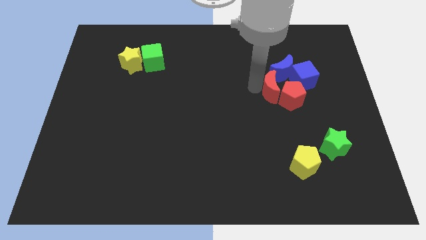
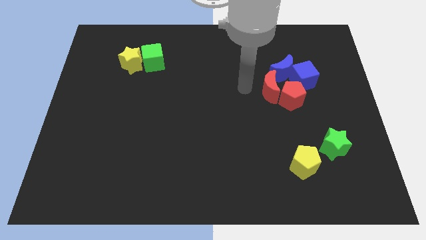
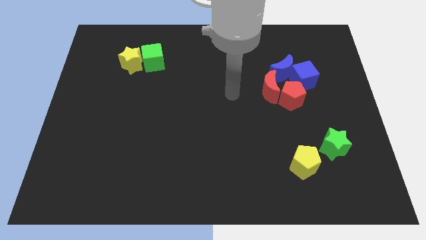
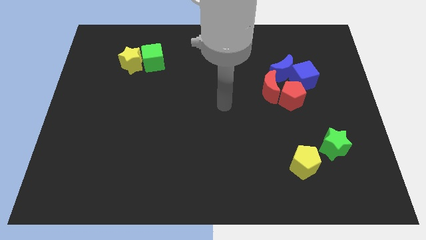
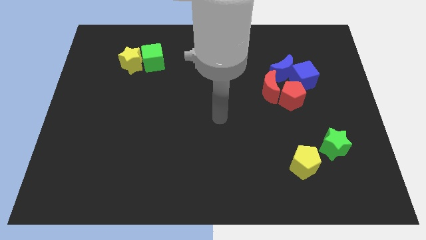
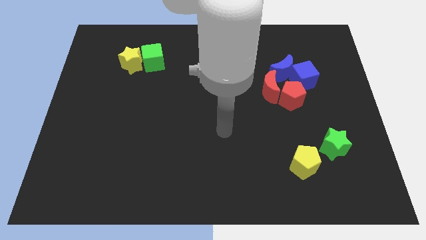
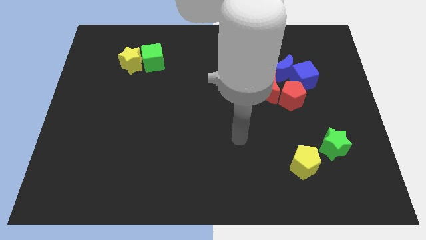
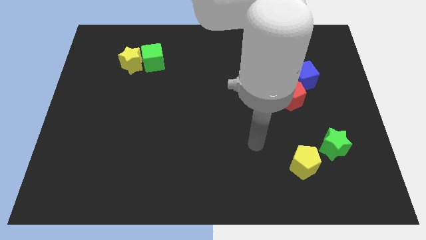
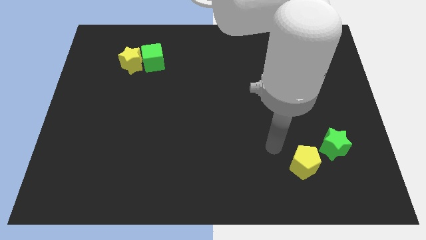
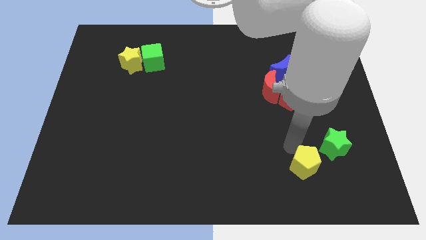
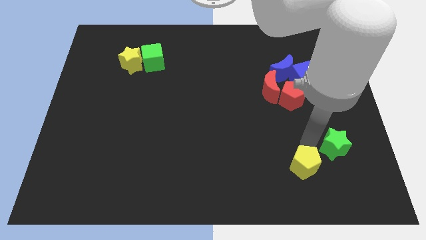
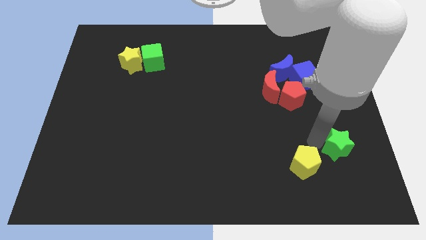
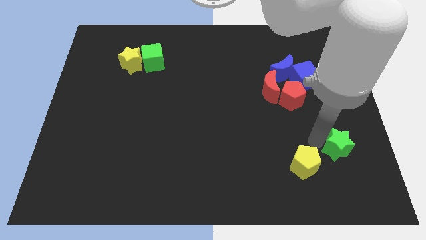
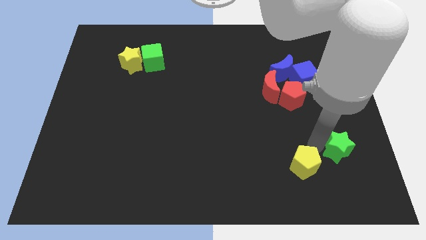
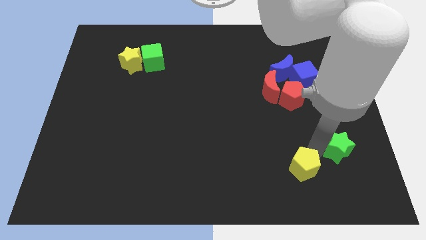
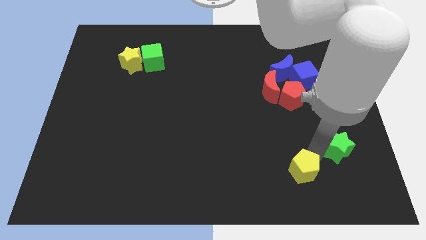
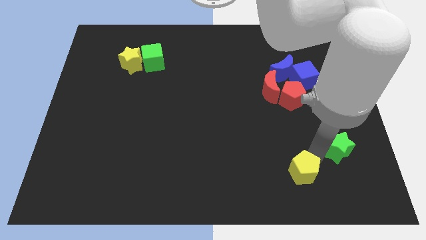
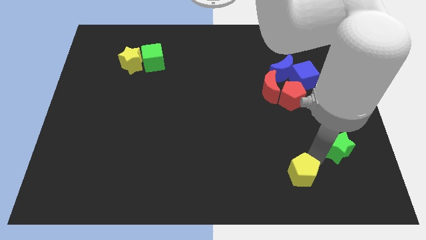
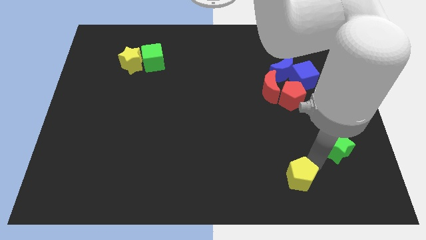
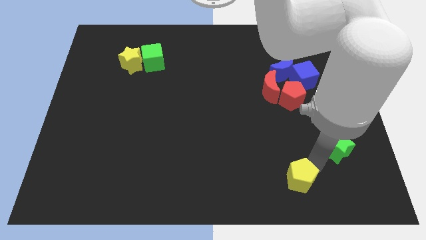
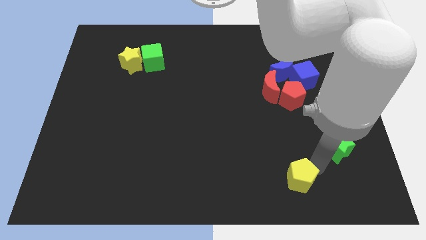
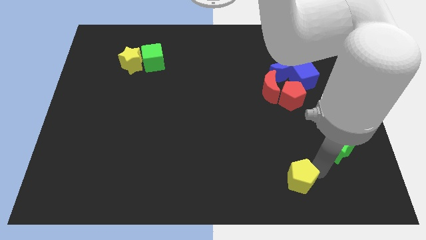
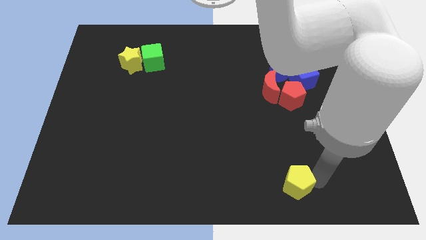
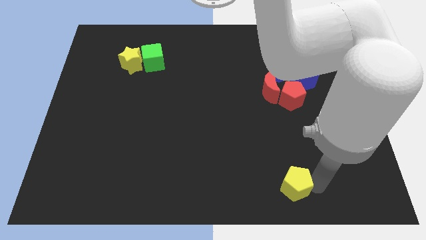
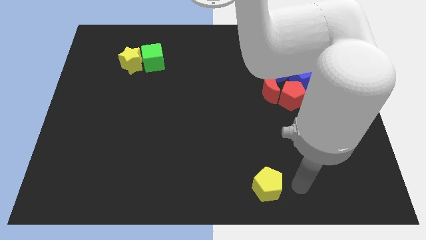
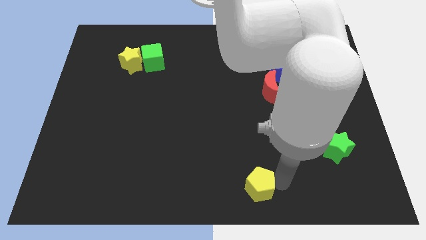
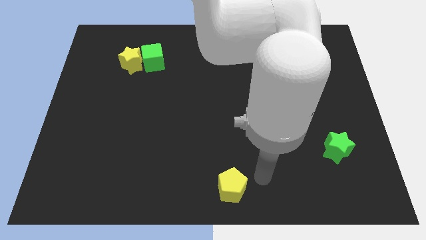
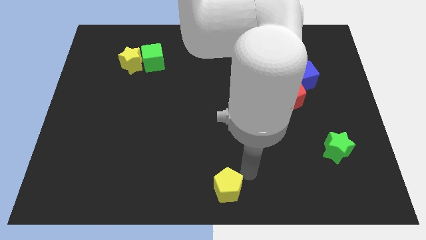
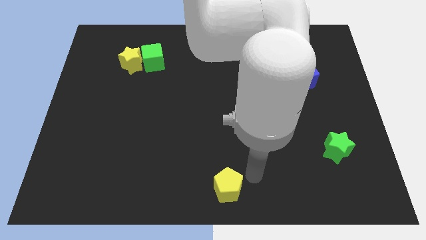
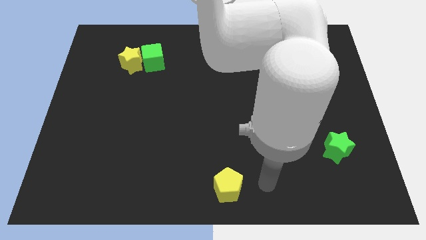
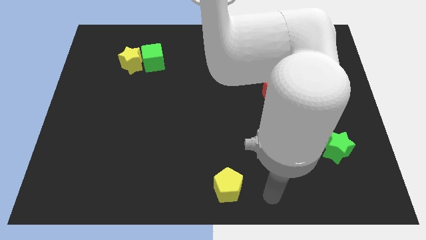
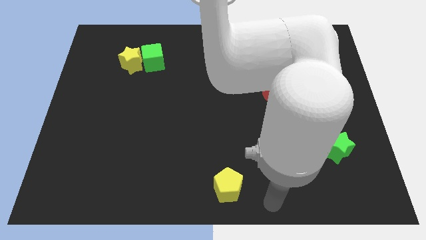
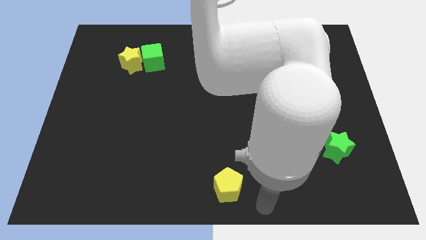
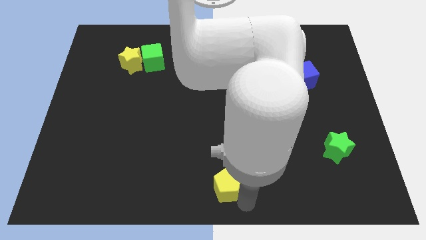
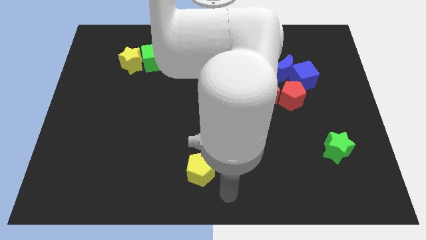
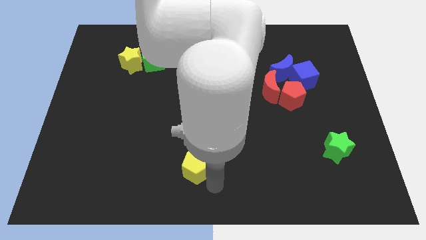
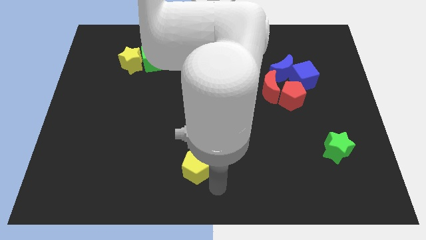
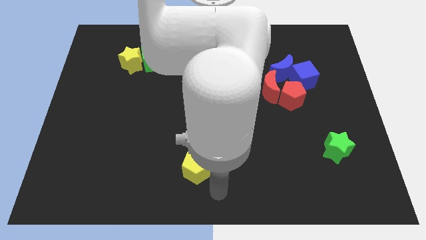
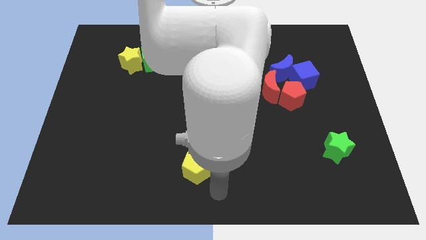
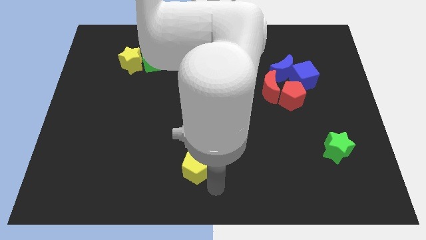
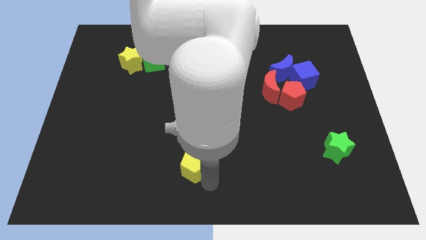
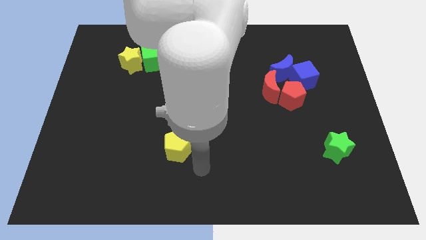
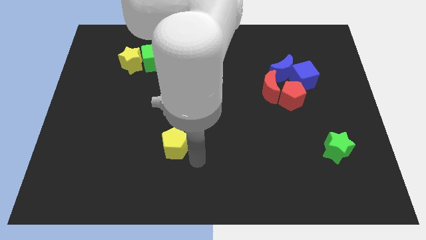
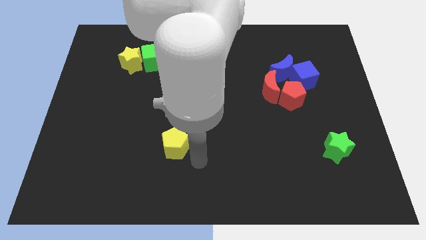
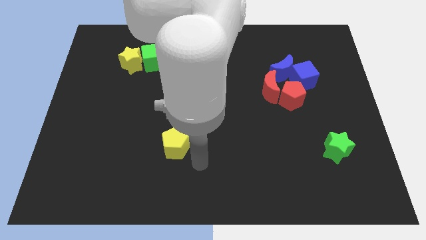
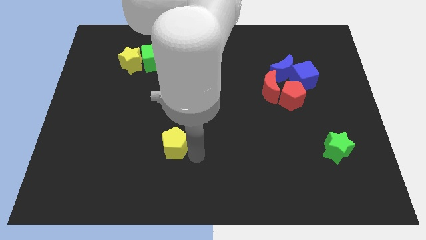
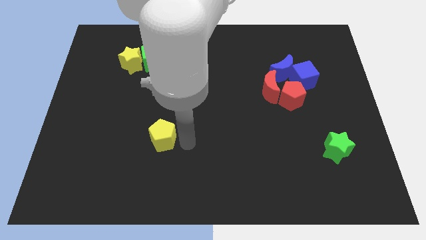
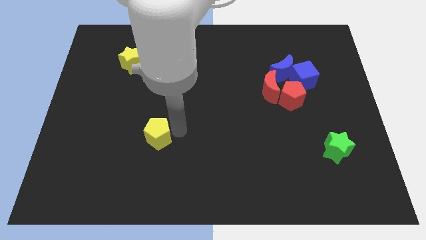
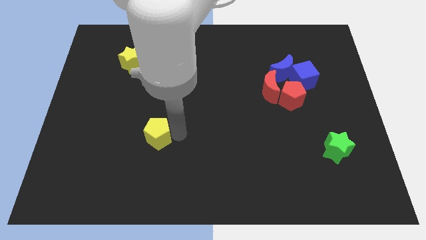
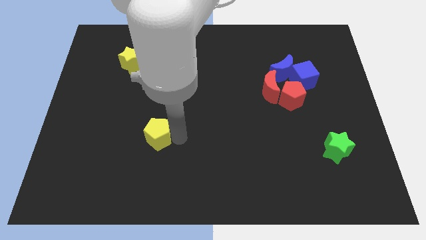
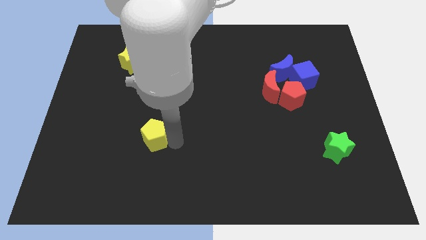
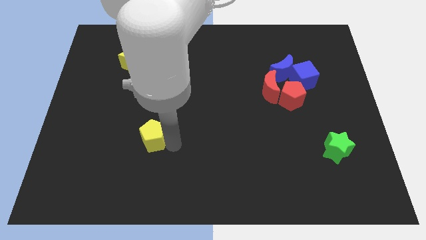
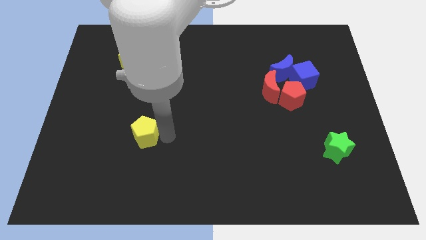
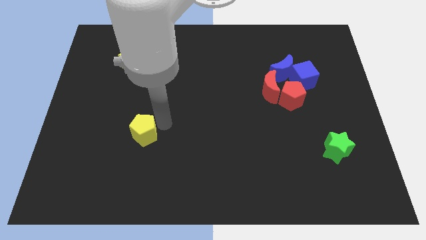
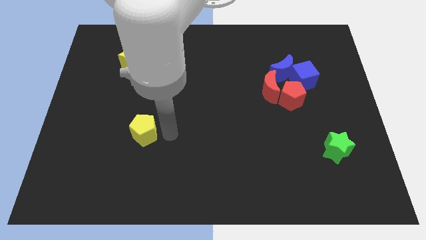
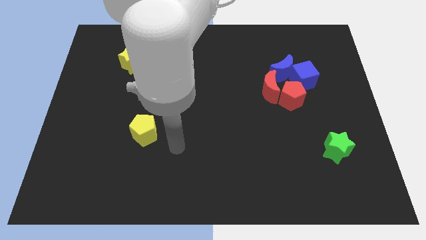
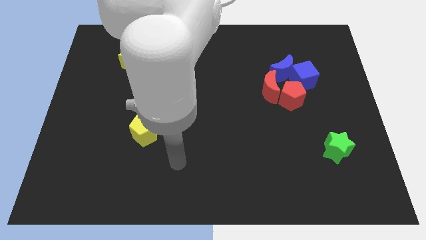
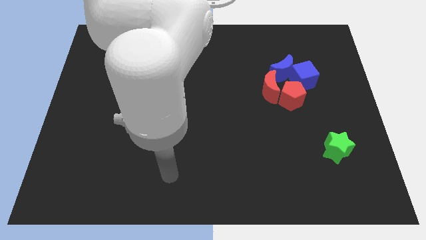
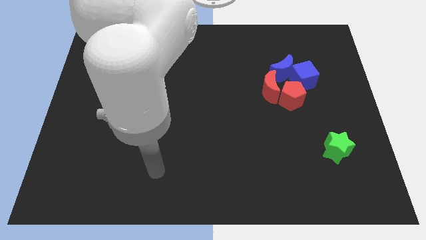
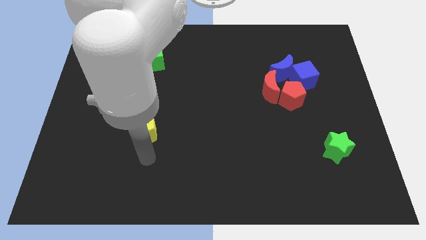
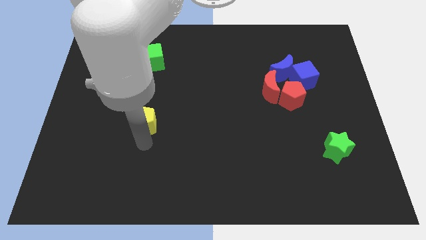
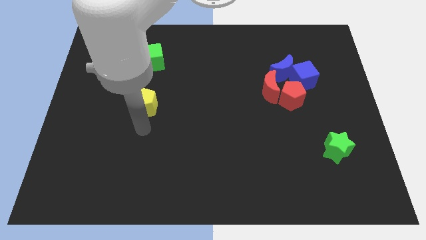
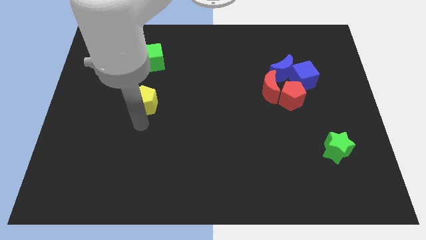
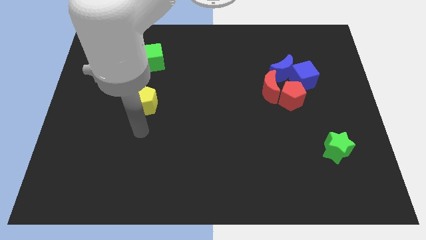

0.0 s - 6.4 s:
move the yellow pentagon towards the group of blocks

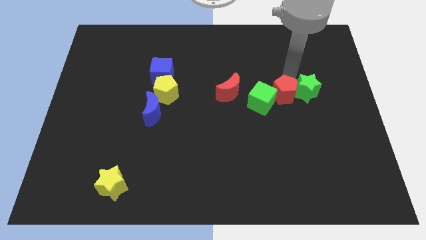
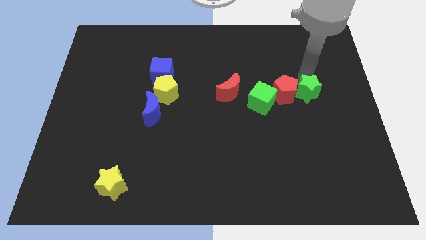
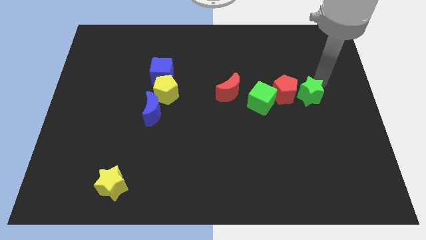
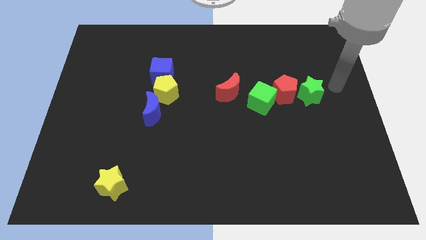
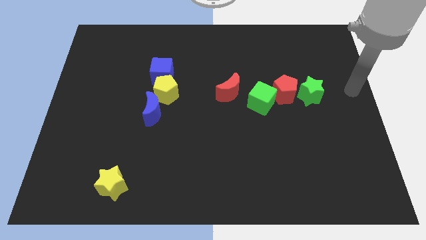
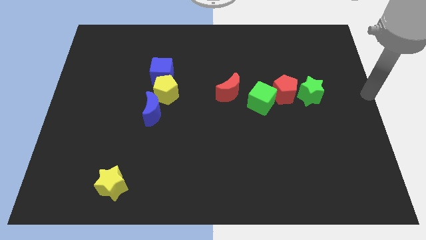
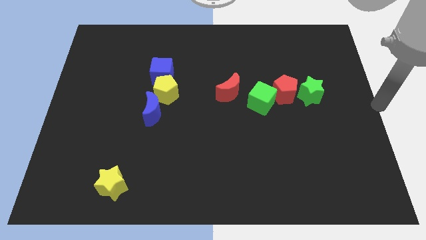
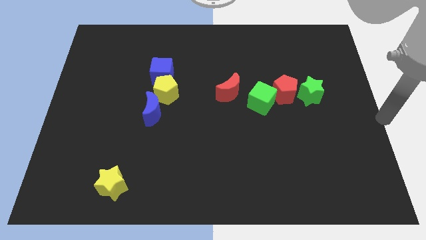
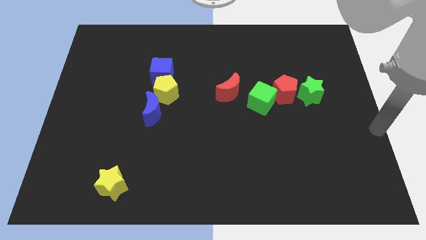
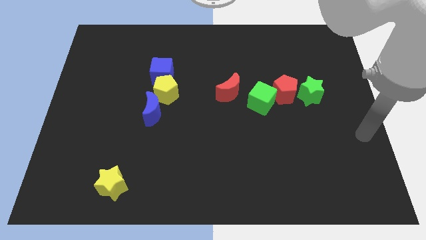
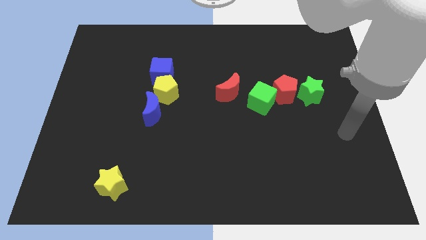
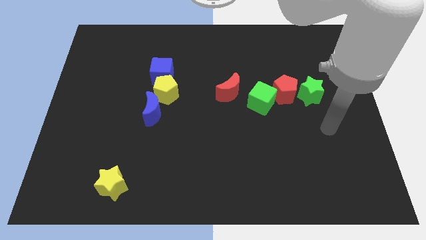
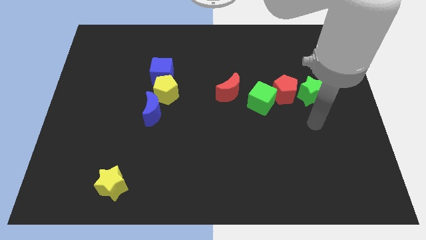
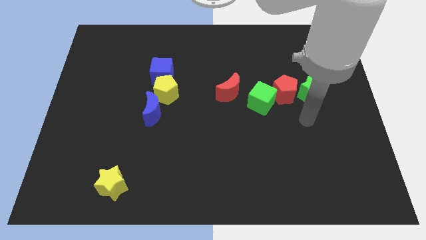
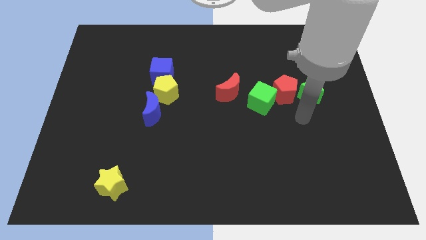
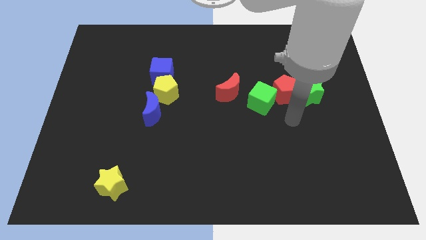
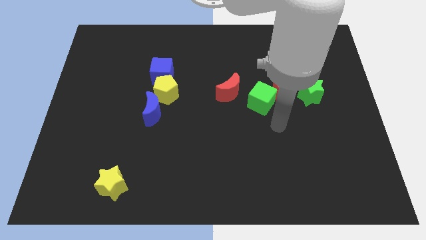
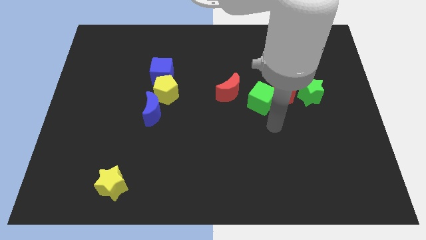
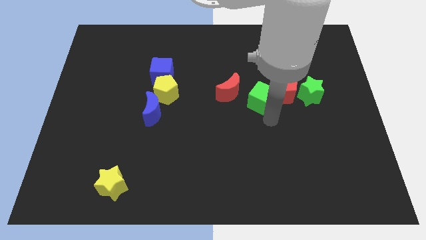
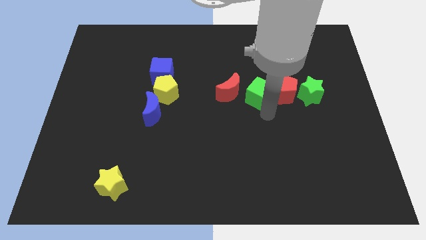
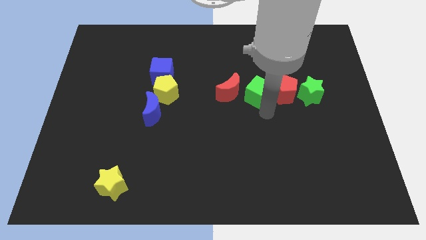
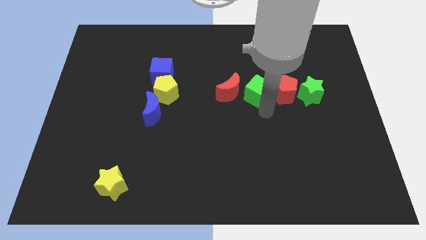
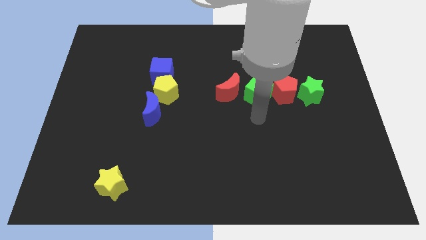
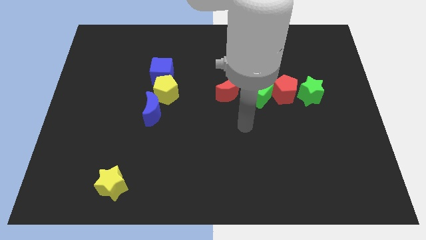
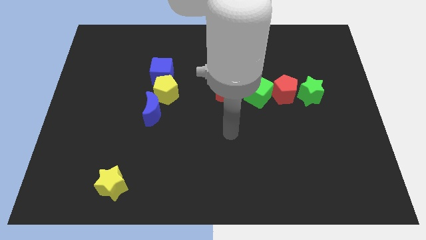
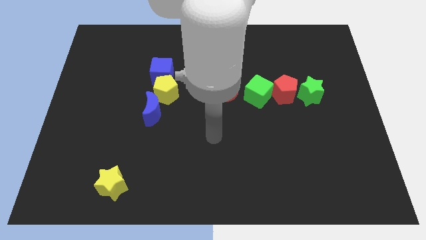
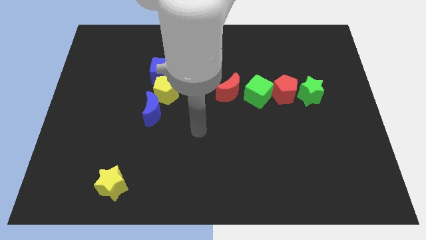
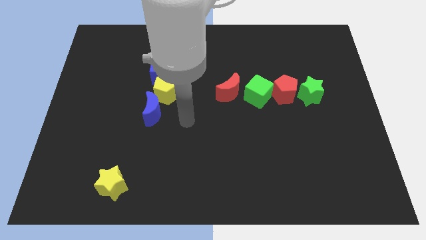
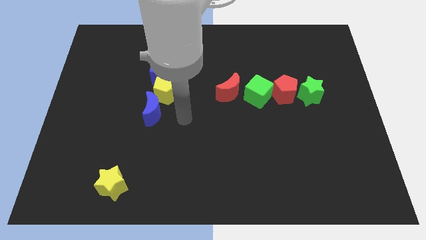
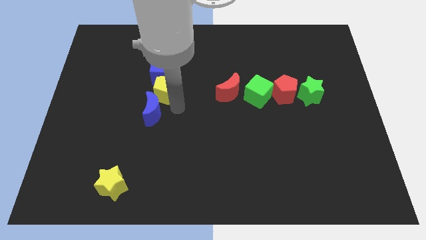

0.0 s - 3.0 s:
adjust the green blocks in between the red blocks
